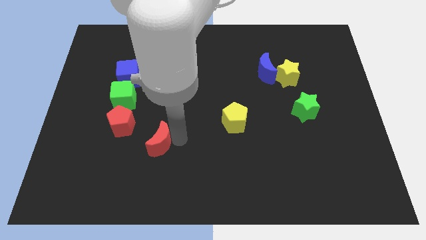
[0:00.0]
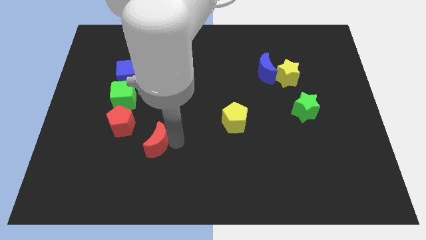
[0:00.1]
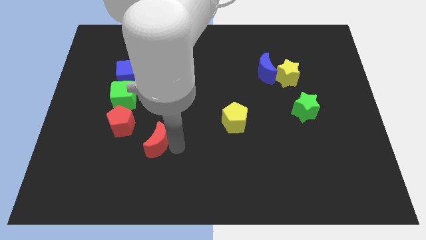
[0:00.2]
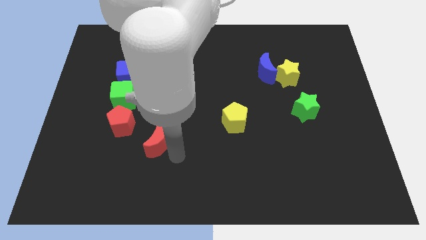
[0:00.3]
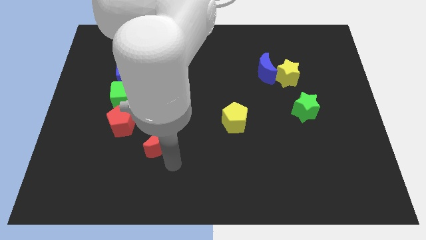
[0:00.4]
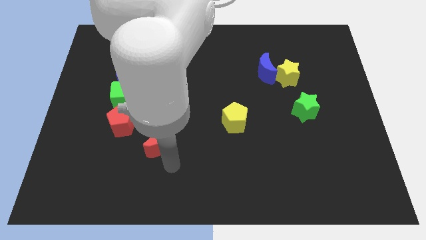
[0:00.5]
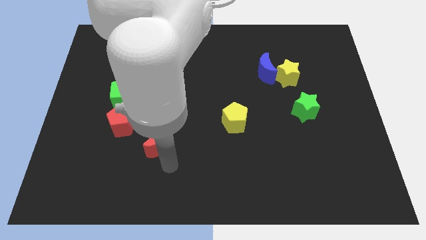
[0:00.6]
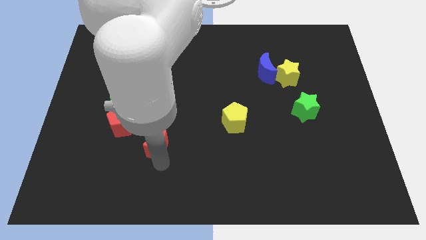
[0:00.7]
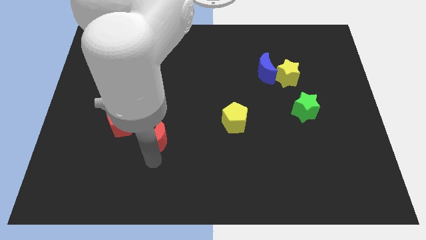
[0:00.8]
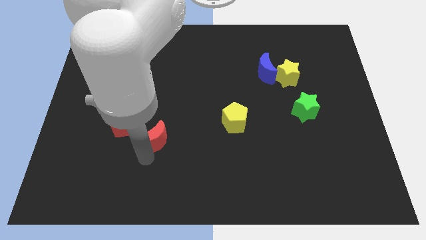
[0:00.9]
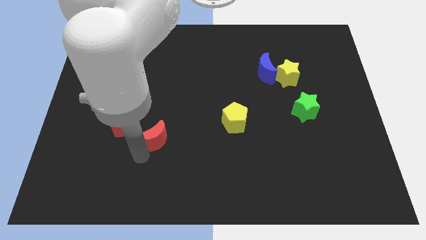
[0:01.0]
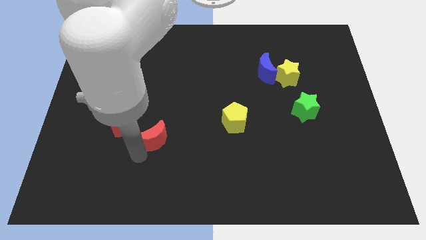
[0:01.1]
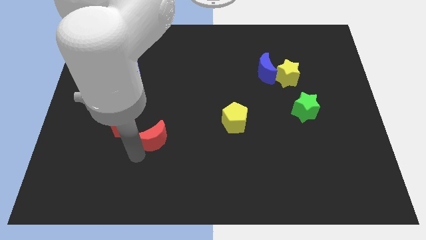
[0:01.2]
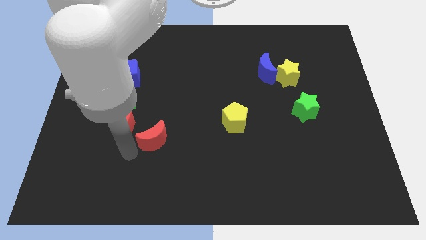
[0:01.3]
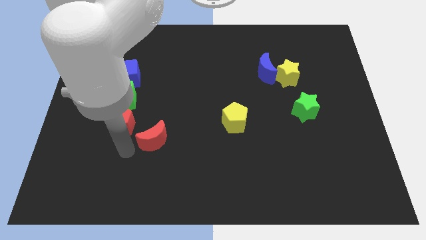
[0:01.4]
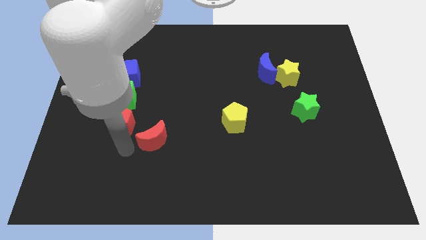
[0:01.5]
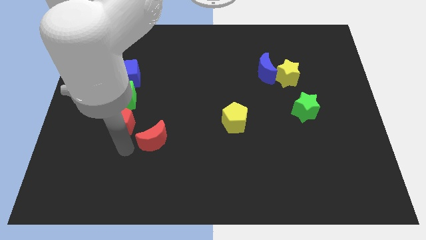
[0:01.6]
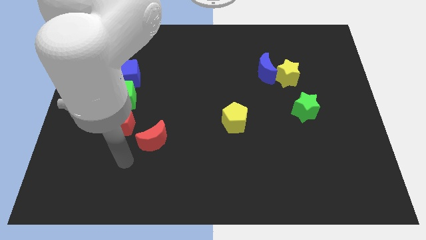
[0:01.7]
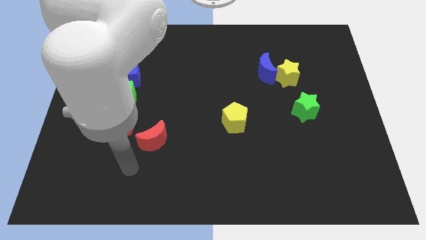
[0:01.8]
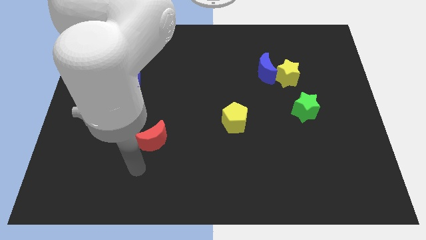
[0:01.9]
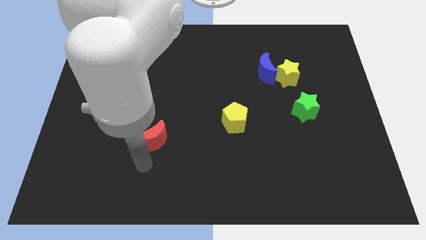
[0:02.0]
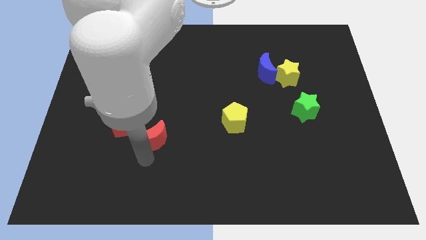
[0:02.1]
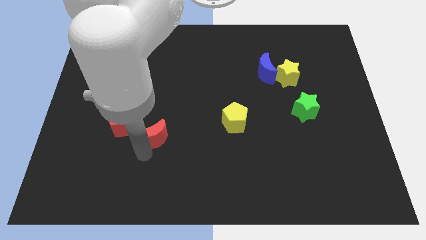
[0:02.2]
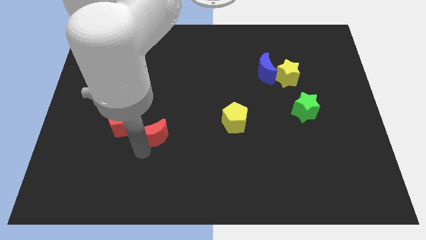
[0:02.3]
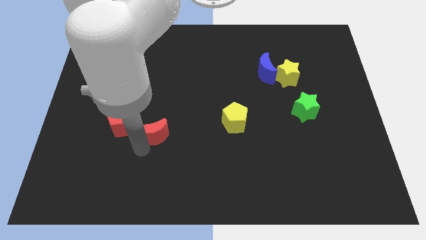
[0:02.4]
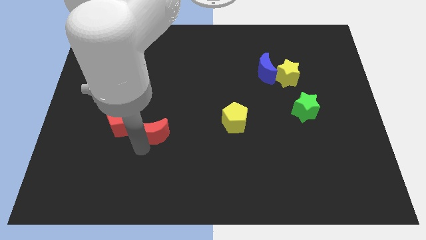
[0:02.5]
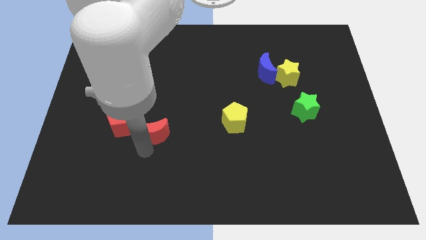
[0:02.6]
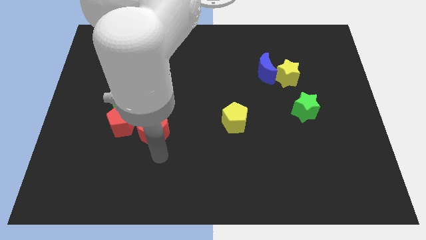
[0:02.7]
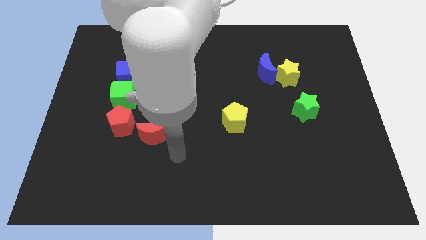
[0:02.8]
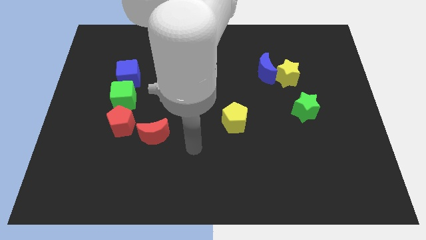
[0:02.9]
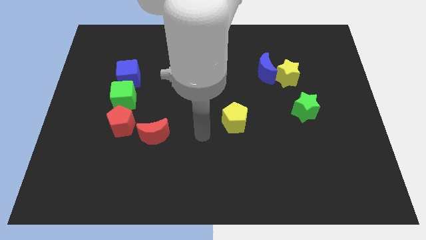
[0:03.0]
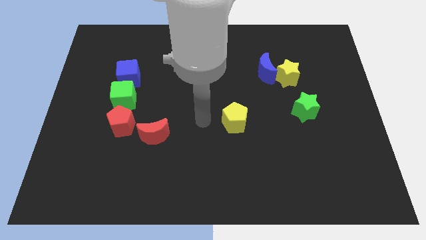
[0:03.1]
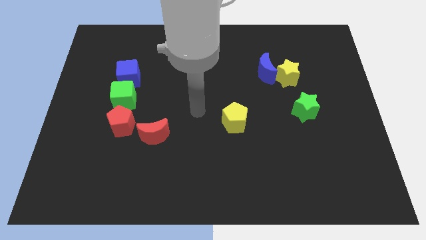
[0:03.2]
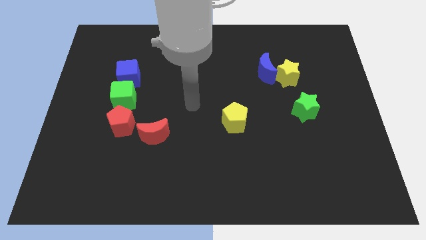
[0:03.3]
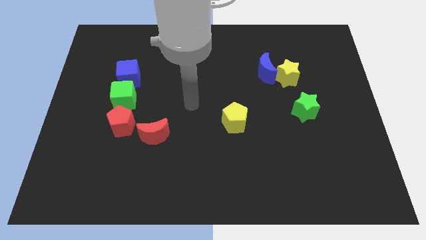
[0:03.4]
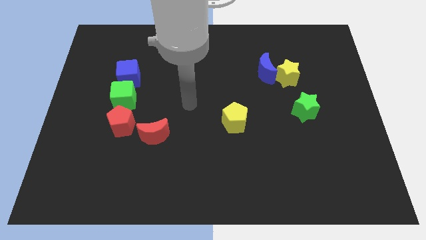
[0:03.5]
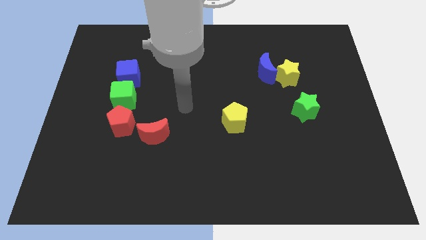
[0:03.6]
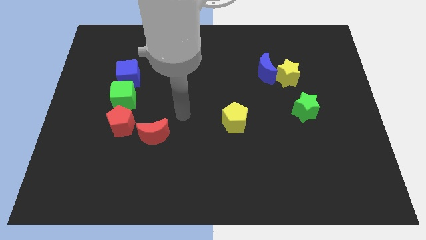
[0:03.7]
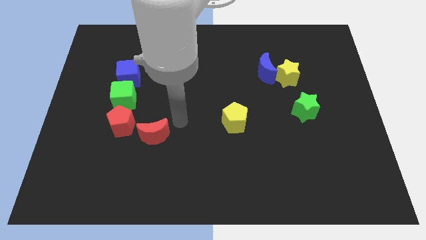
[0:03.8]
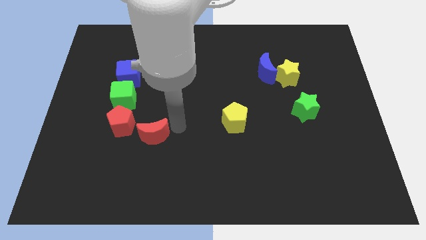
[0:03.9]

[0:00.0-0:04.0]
place the red moon to the right of the red pentagon

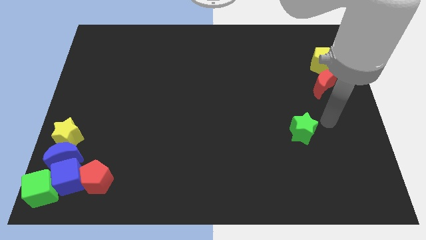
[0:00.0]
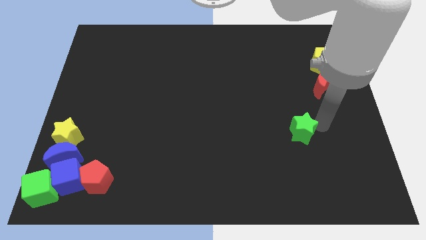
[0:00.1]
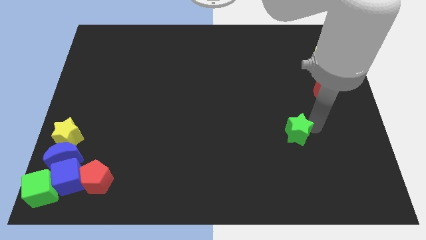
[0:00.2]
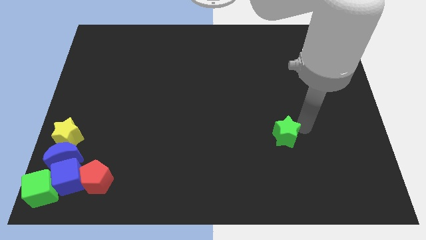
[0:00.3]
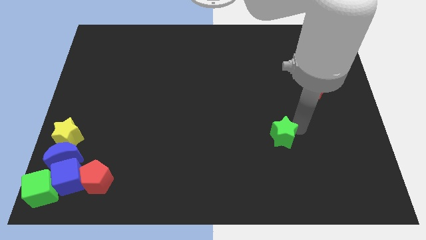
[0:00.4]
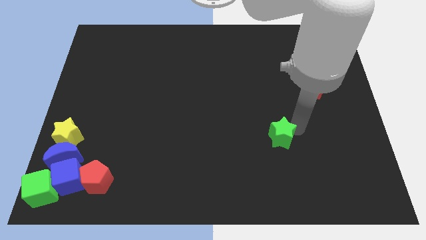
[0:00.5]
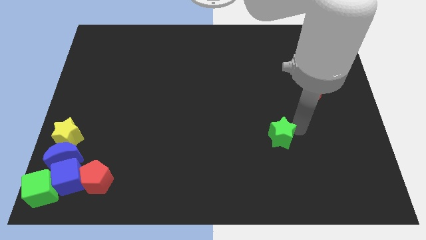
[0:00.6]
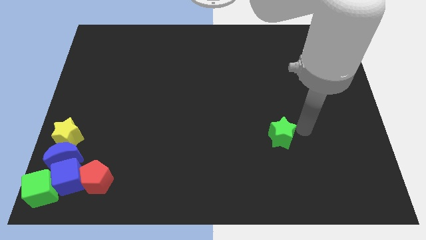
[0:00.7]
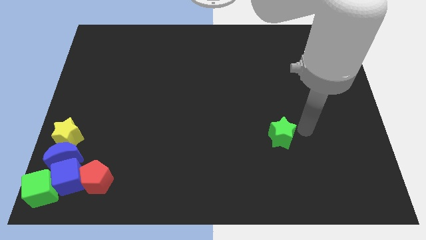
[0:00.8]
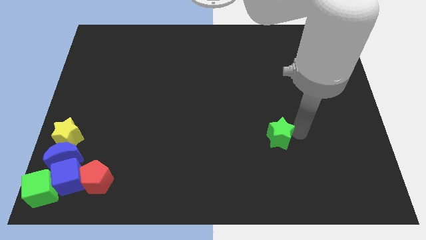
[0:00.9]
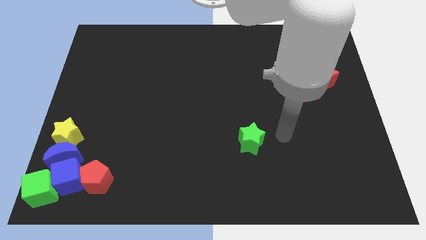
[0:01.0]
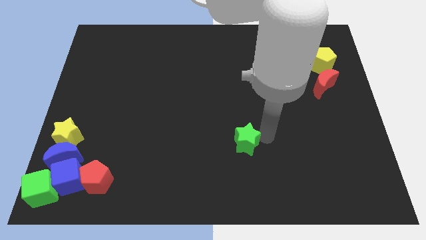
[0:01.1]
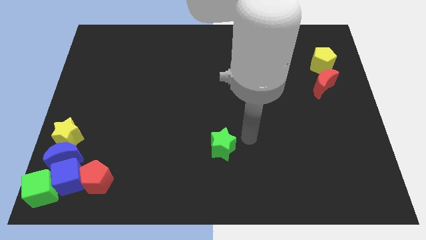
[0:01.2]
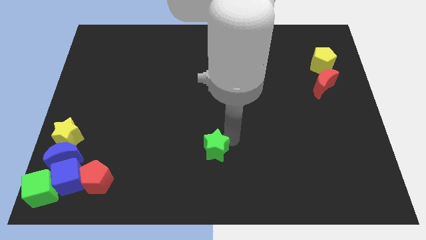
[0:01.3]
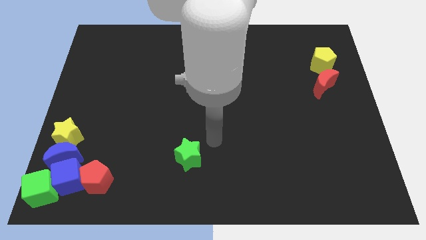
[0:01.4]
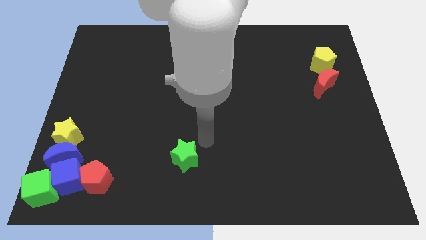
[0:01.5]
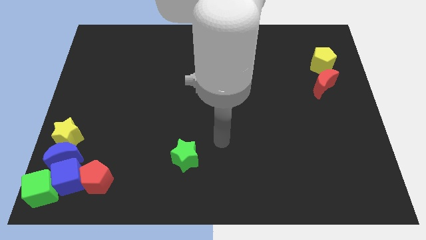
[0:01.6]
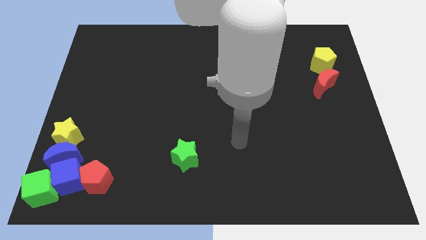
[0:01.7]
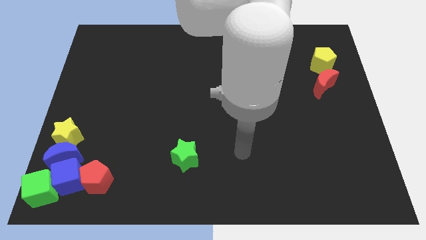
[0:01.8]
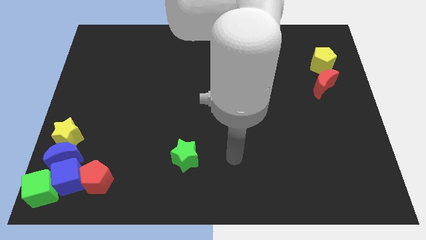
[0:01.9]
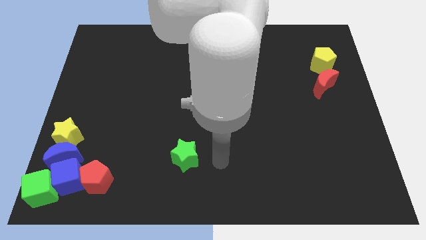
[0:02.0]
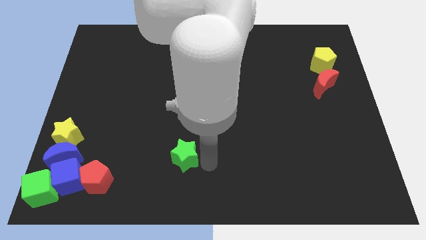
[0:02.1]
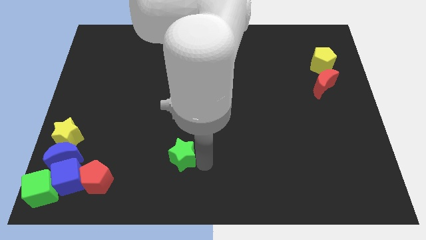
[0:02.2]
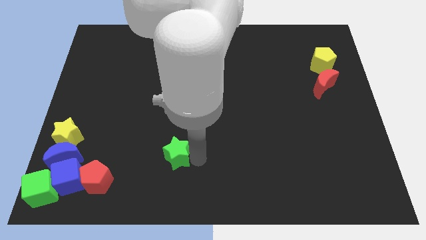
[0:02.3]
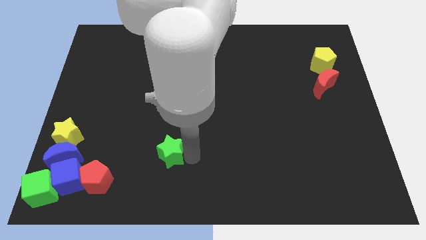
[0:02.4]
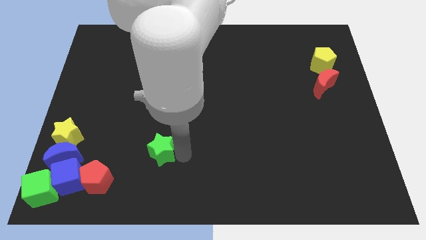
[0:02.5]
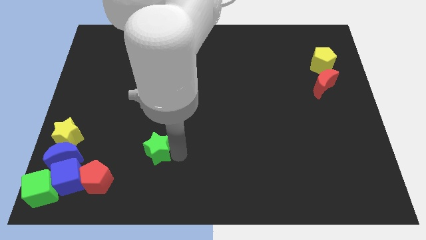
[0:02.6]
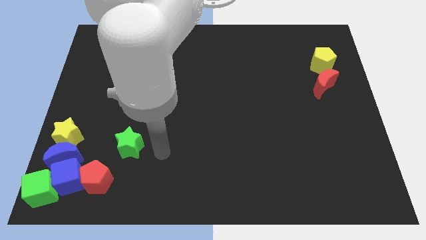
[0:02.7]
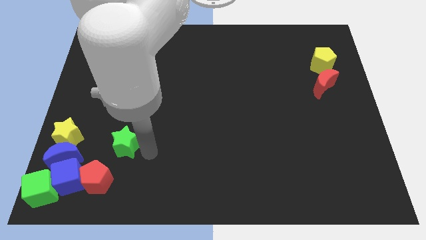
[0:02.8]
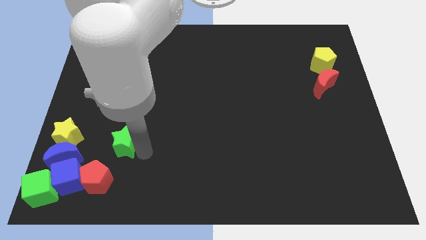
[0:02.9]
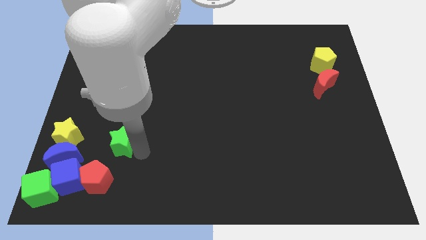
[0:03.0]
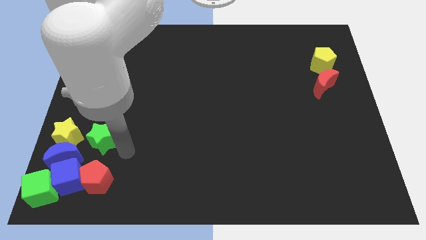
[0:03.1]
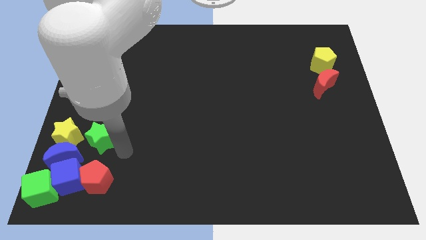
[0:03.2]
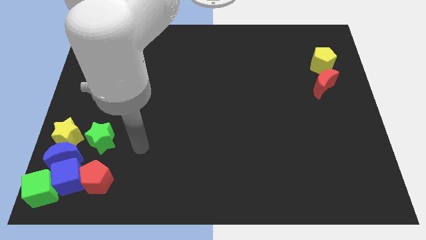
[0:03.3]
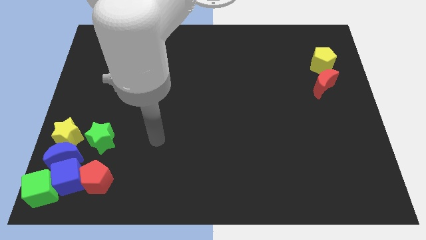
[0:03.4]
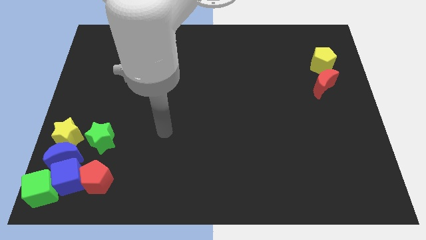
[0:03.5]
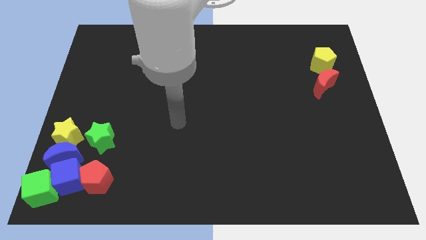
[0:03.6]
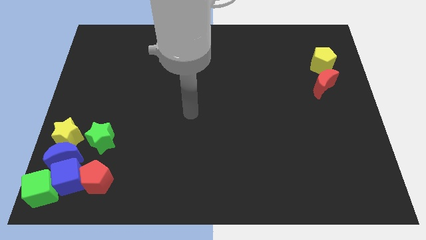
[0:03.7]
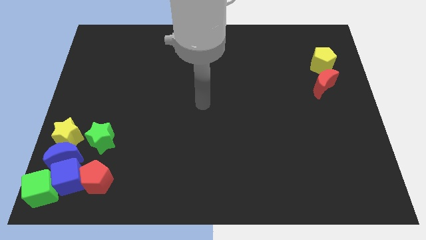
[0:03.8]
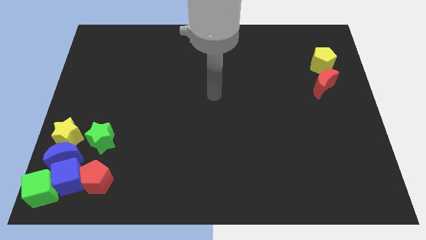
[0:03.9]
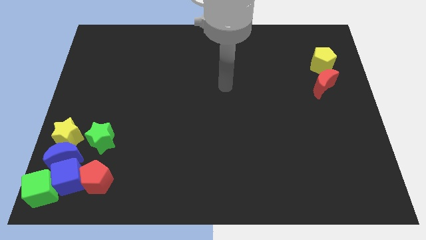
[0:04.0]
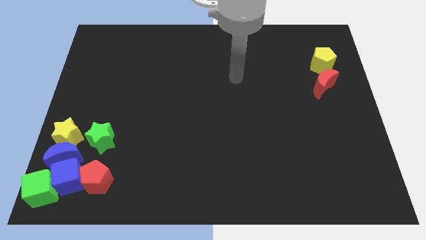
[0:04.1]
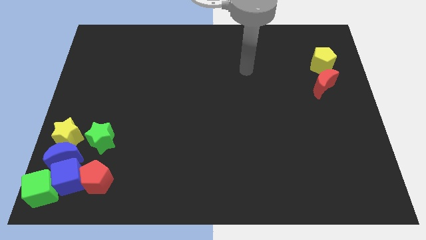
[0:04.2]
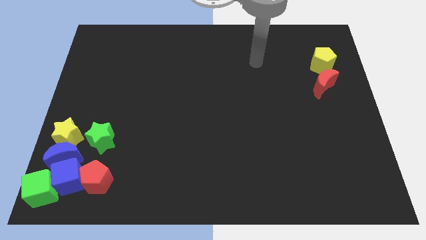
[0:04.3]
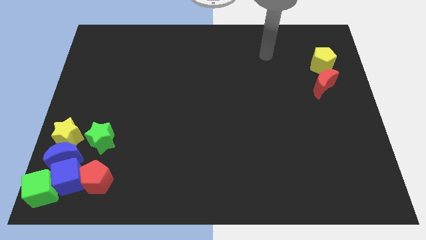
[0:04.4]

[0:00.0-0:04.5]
push the green star right to the yellow star

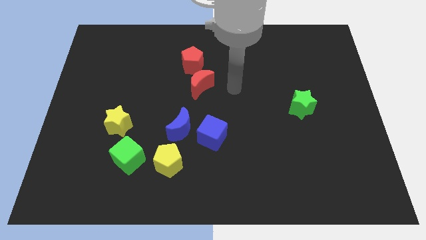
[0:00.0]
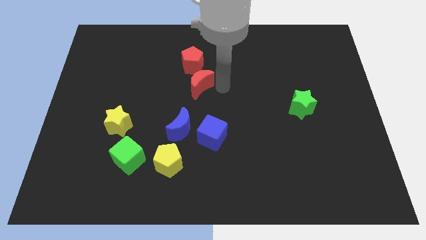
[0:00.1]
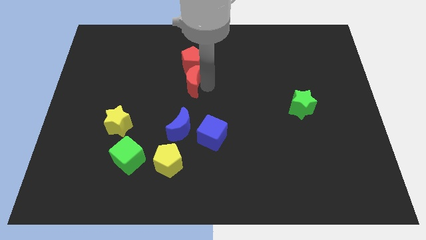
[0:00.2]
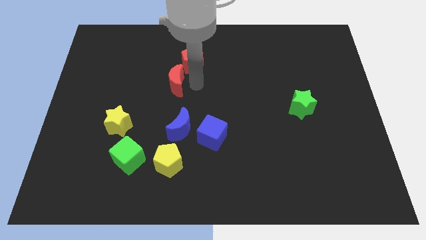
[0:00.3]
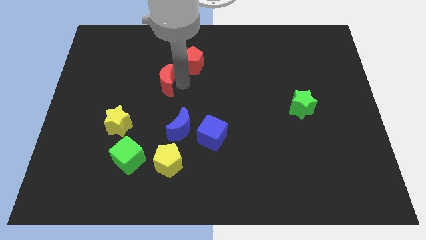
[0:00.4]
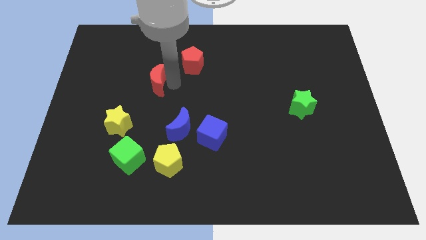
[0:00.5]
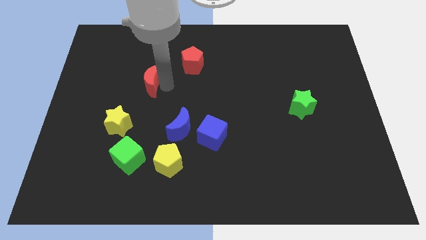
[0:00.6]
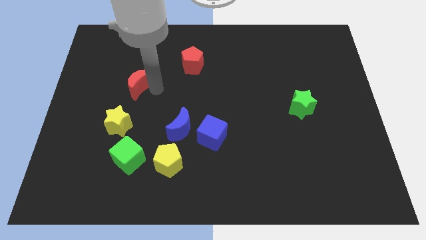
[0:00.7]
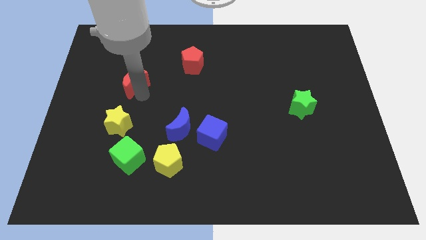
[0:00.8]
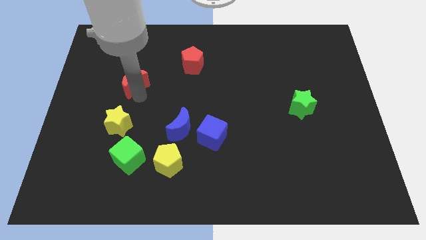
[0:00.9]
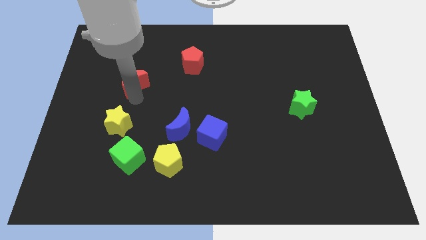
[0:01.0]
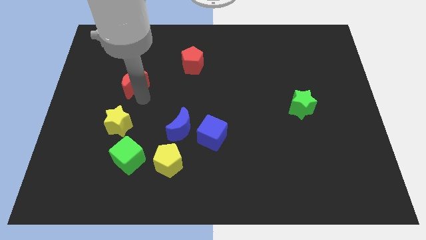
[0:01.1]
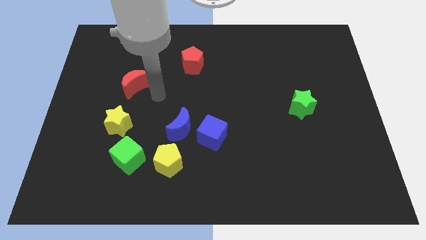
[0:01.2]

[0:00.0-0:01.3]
place the red moon above the yellow star
